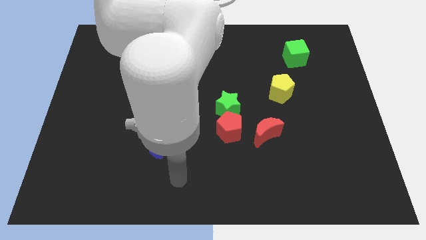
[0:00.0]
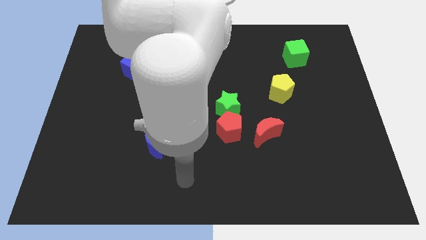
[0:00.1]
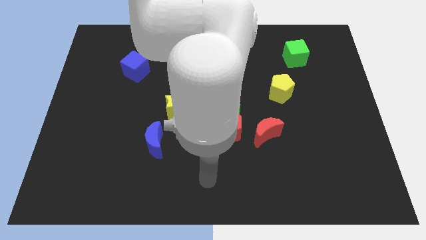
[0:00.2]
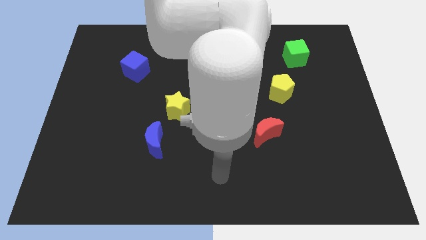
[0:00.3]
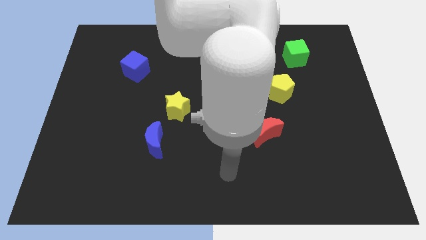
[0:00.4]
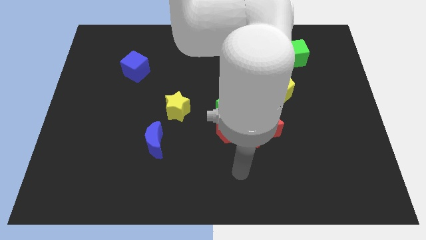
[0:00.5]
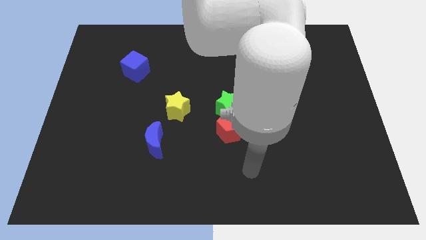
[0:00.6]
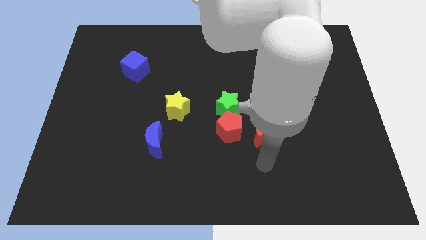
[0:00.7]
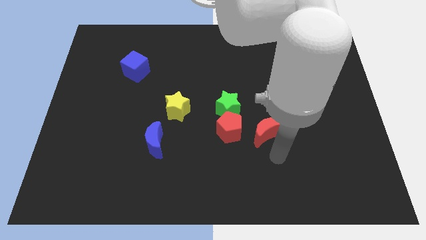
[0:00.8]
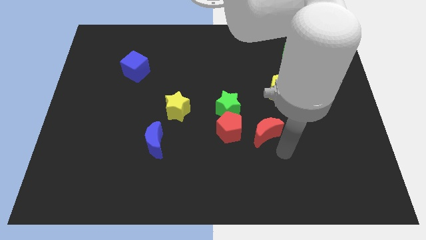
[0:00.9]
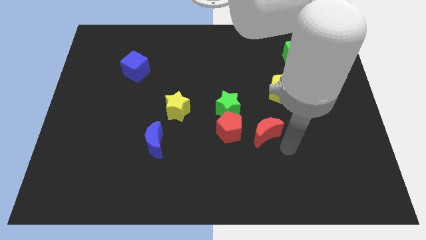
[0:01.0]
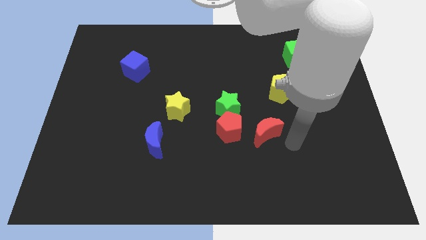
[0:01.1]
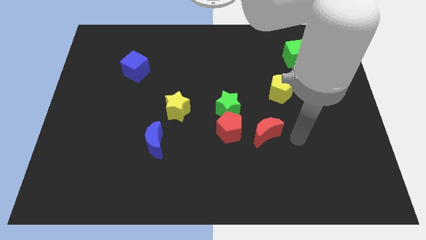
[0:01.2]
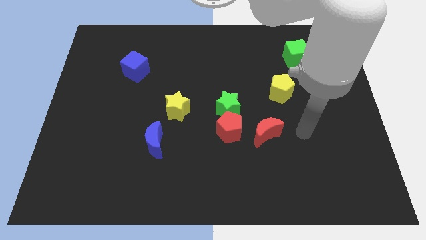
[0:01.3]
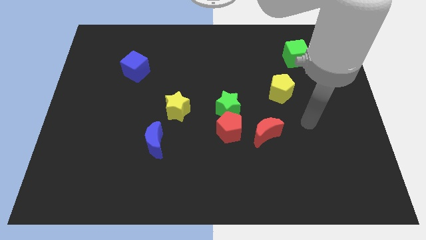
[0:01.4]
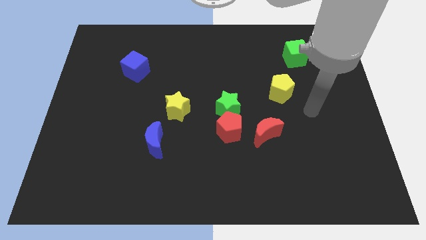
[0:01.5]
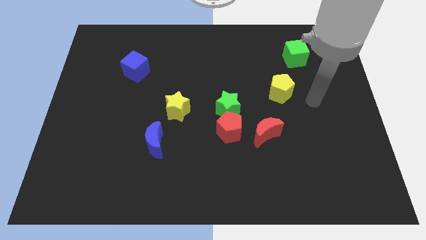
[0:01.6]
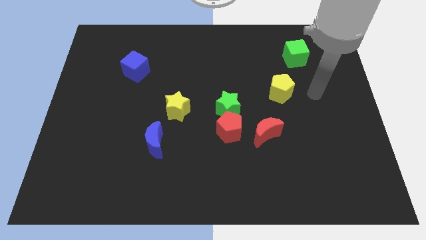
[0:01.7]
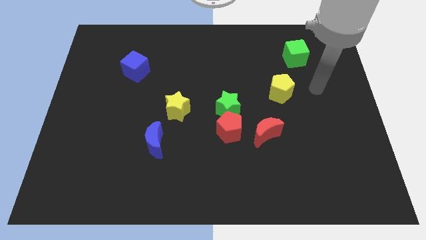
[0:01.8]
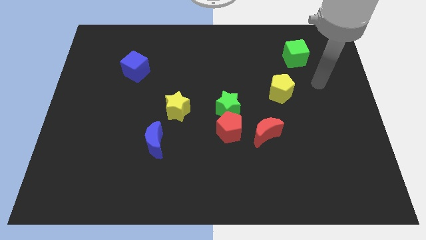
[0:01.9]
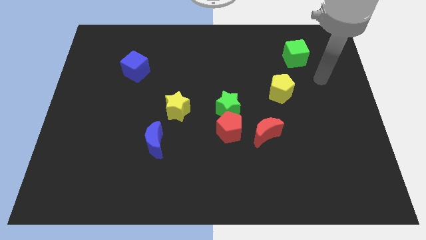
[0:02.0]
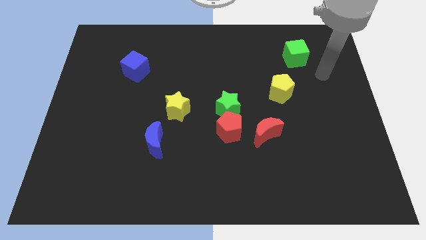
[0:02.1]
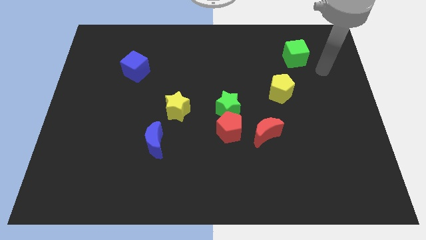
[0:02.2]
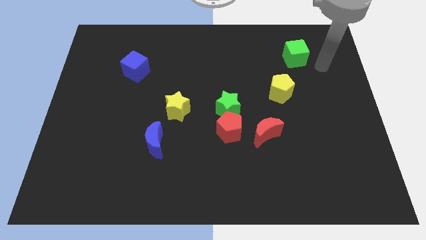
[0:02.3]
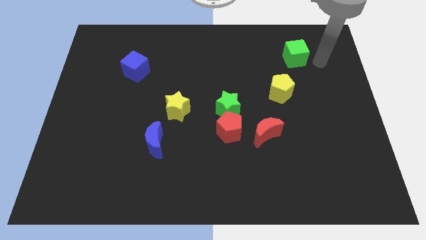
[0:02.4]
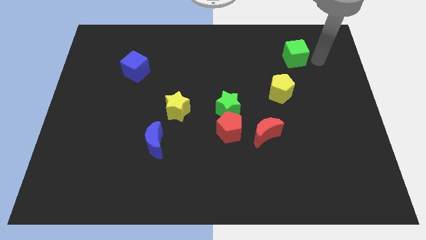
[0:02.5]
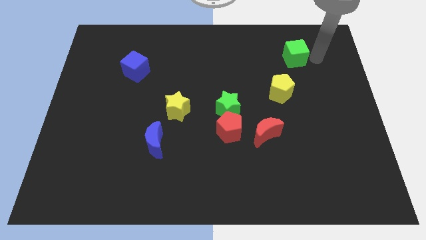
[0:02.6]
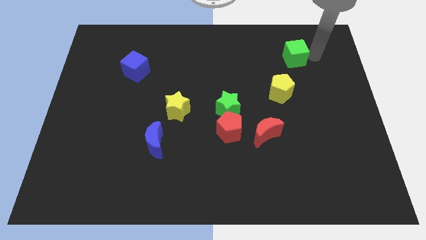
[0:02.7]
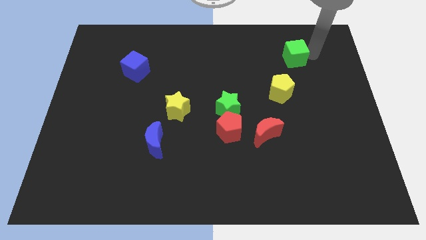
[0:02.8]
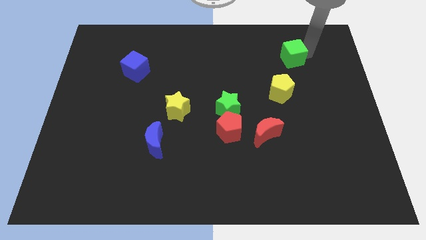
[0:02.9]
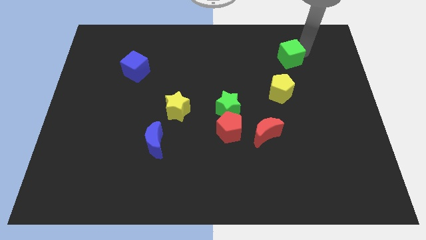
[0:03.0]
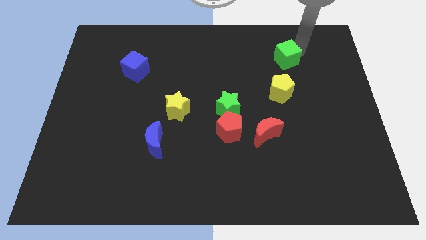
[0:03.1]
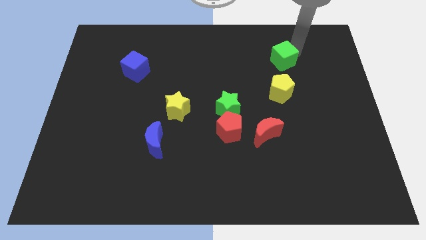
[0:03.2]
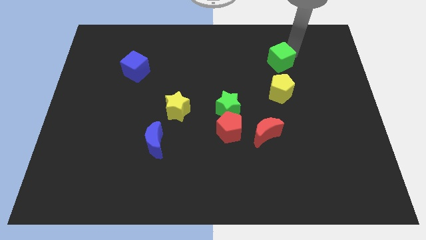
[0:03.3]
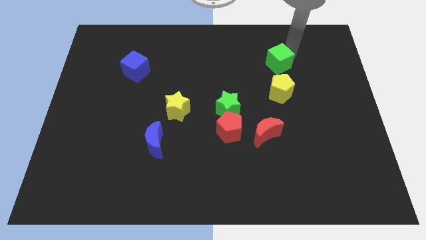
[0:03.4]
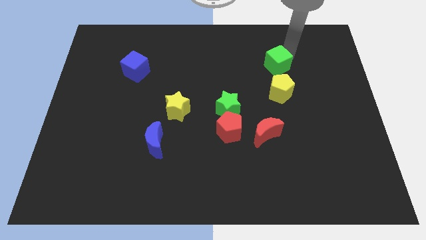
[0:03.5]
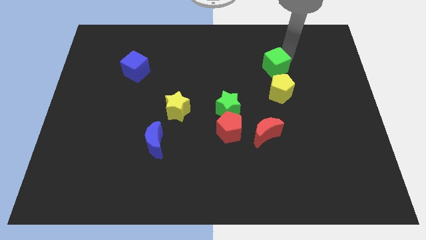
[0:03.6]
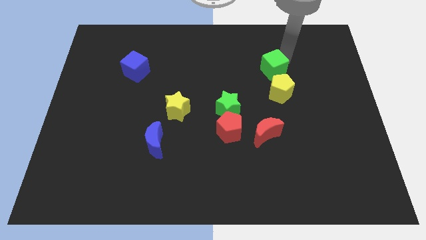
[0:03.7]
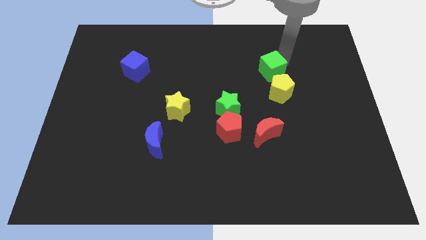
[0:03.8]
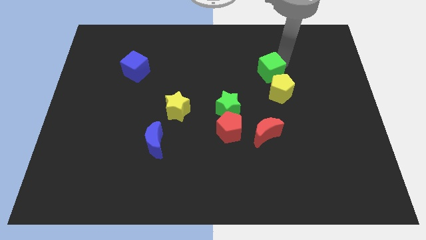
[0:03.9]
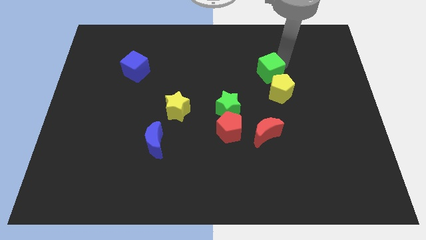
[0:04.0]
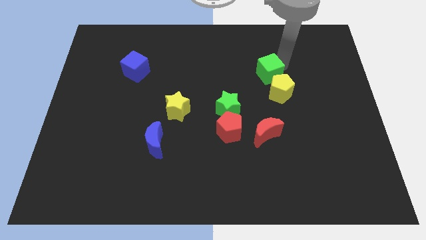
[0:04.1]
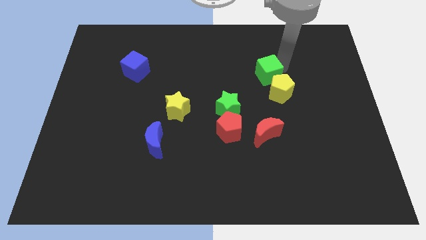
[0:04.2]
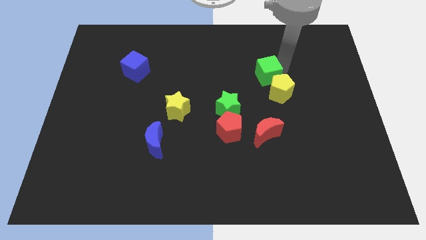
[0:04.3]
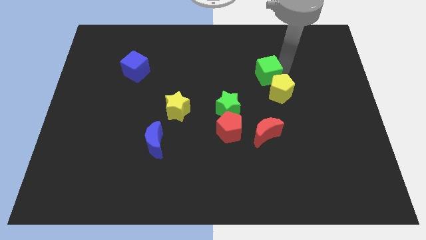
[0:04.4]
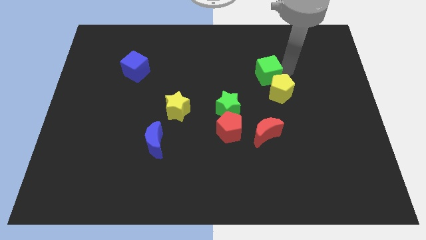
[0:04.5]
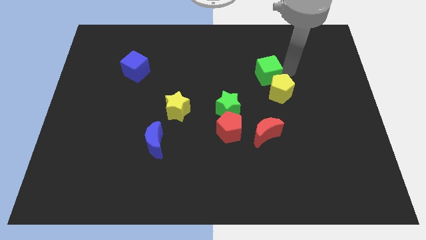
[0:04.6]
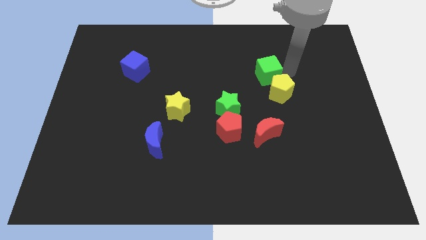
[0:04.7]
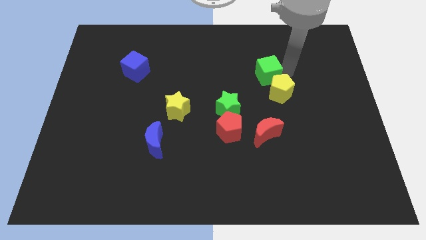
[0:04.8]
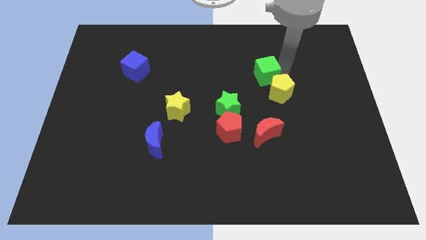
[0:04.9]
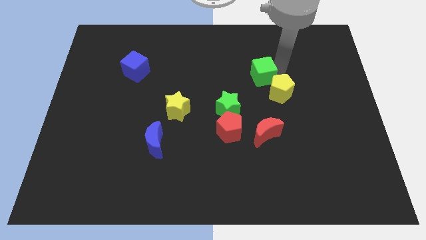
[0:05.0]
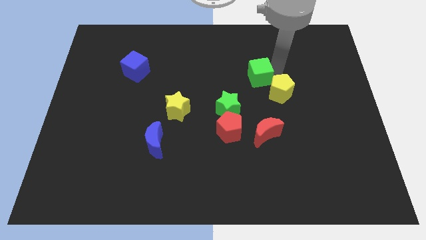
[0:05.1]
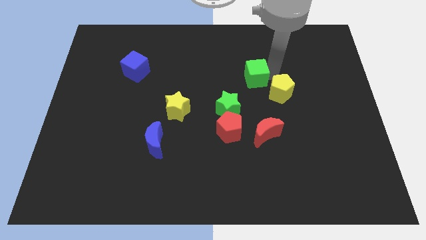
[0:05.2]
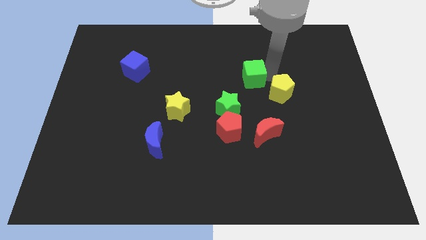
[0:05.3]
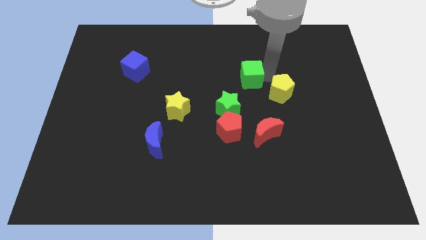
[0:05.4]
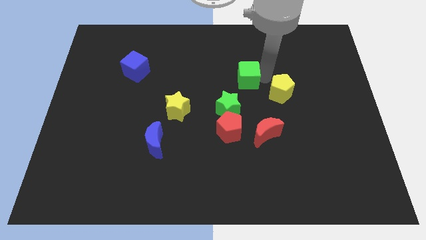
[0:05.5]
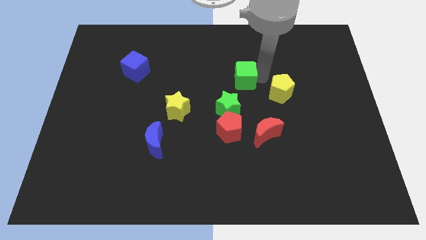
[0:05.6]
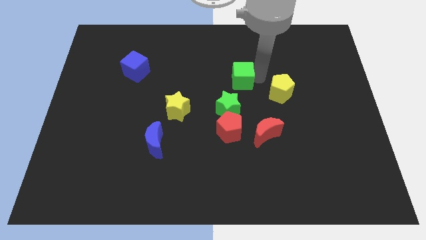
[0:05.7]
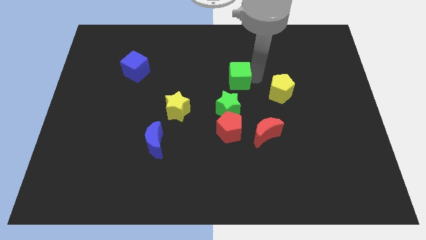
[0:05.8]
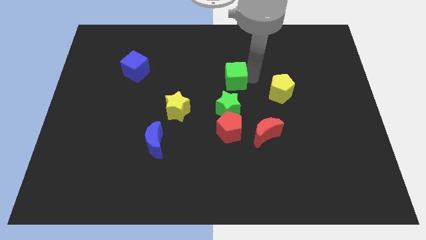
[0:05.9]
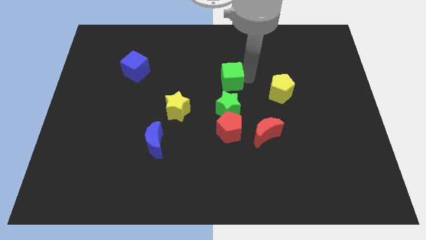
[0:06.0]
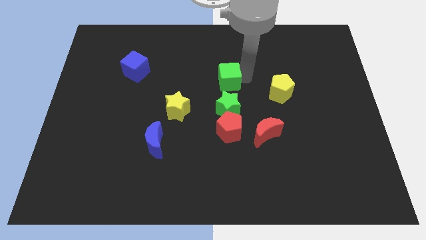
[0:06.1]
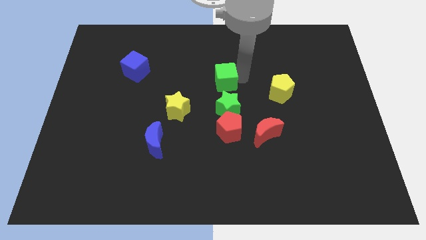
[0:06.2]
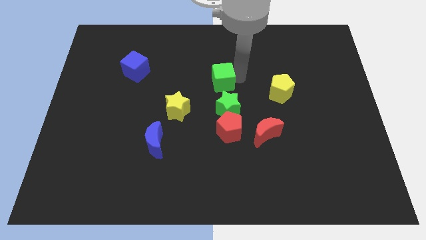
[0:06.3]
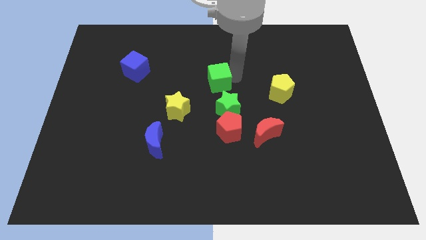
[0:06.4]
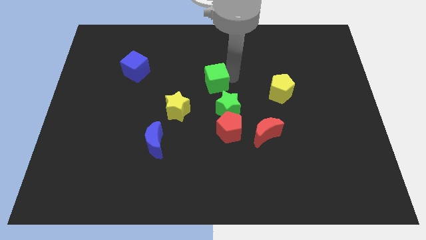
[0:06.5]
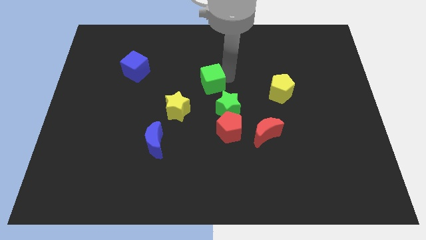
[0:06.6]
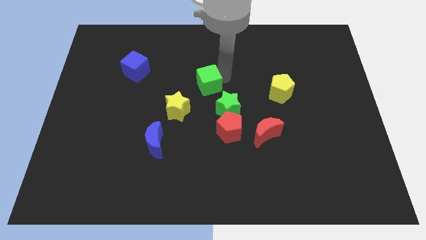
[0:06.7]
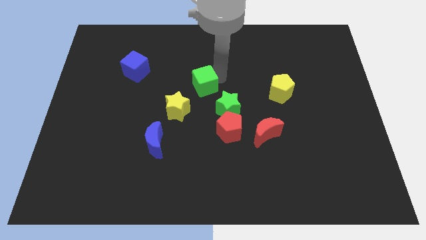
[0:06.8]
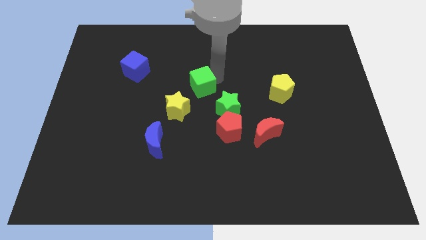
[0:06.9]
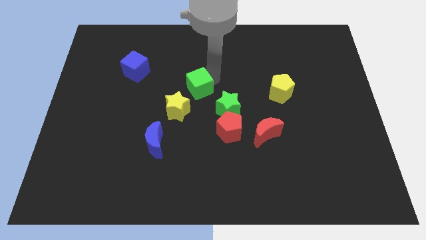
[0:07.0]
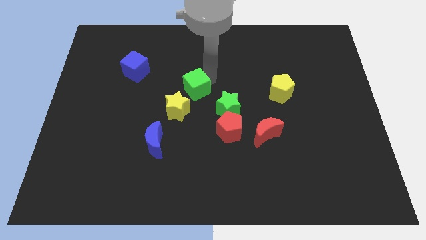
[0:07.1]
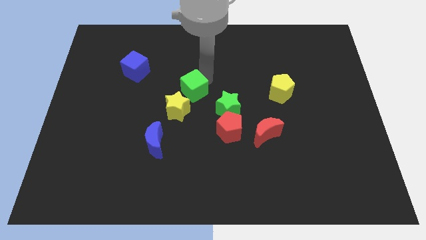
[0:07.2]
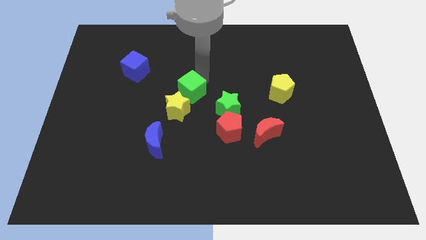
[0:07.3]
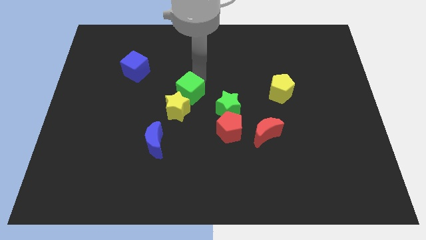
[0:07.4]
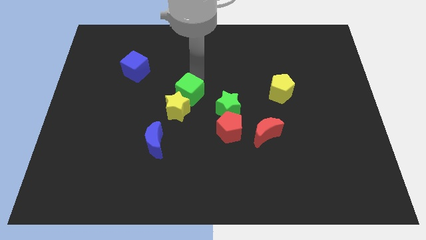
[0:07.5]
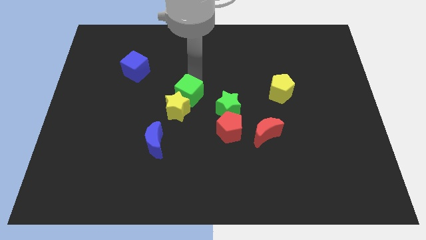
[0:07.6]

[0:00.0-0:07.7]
slide the green cube next to the yellow star

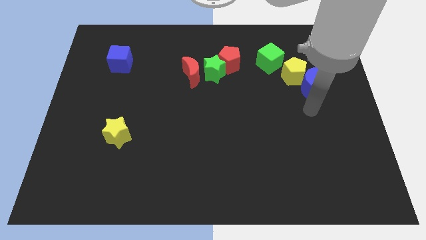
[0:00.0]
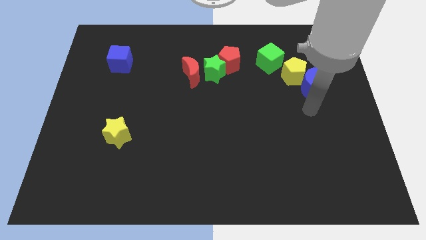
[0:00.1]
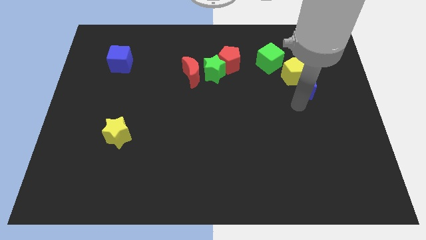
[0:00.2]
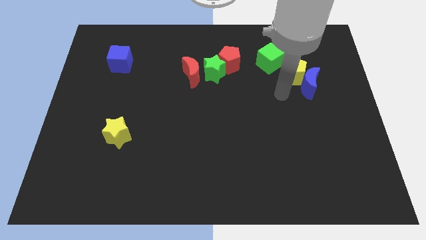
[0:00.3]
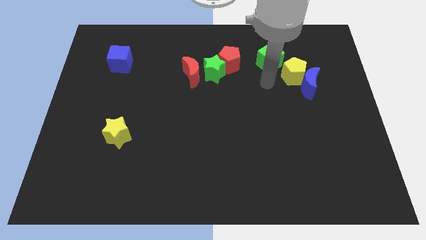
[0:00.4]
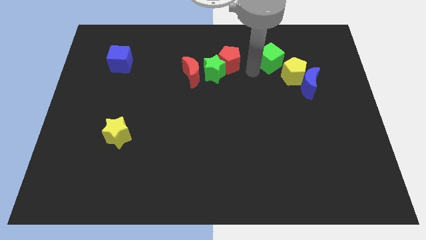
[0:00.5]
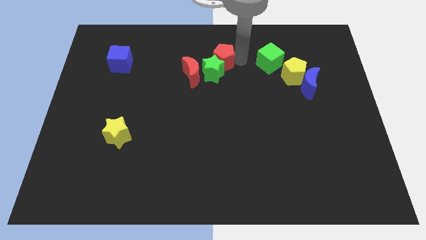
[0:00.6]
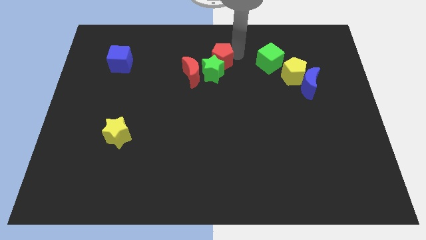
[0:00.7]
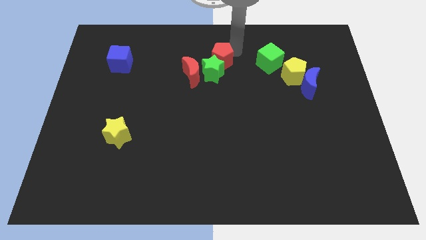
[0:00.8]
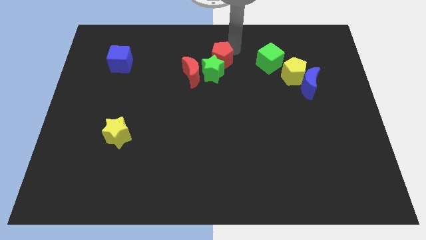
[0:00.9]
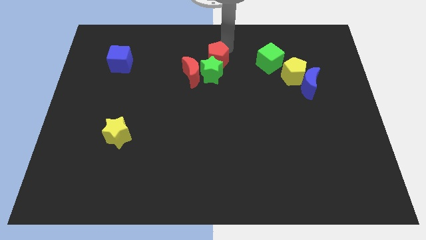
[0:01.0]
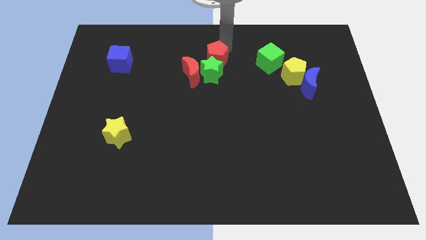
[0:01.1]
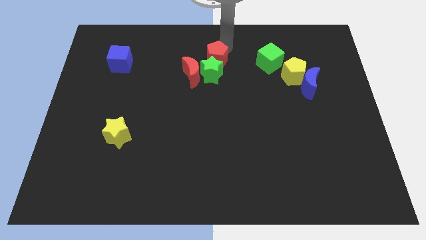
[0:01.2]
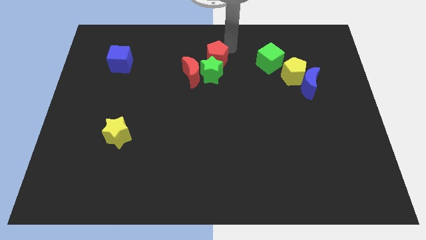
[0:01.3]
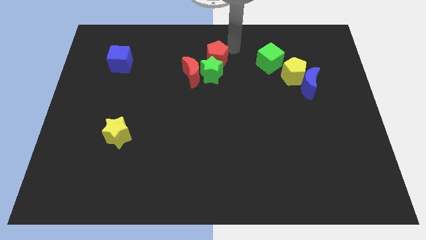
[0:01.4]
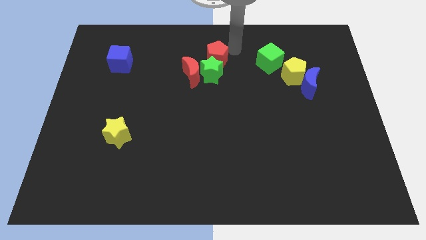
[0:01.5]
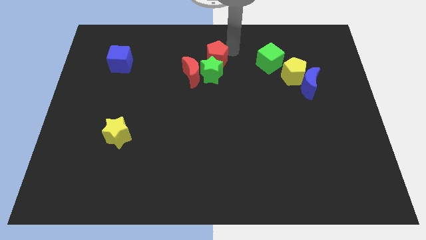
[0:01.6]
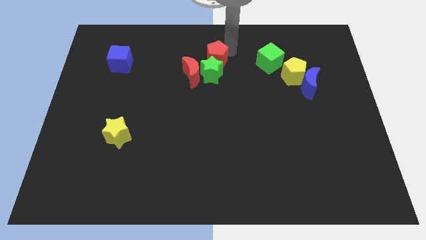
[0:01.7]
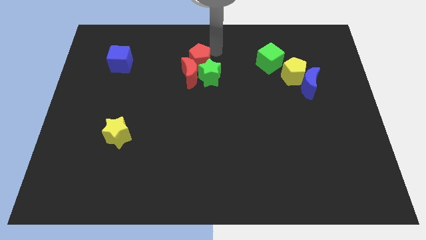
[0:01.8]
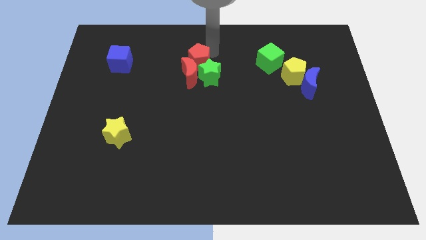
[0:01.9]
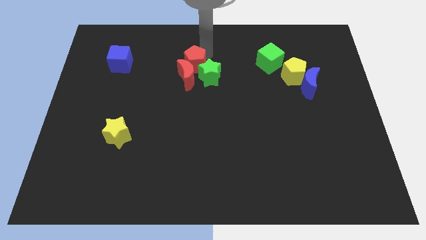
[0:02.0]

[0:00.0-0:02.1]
push the red pentagon towards the red moon
